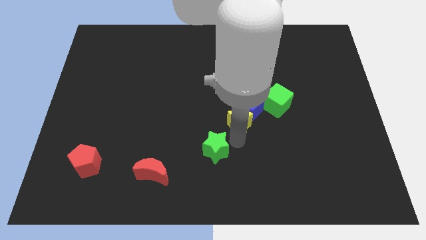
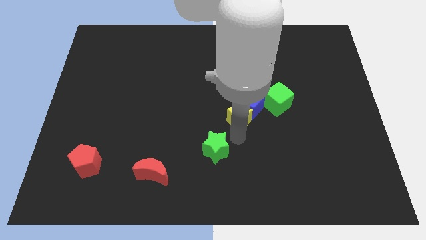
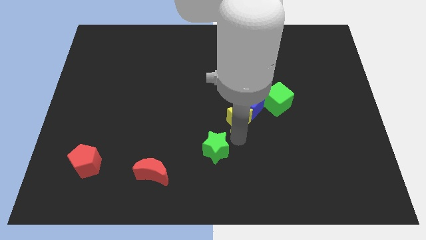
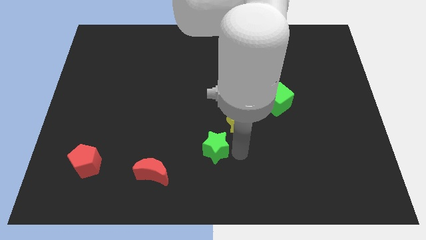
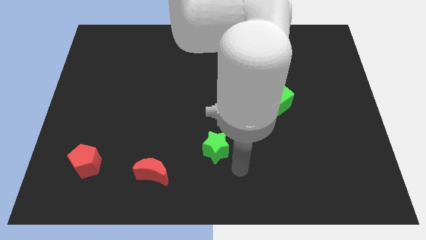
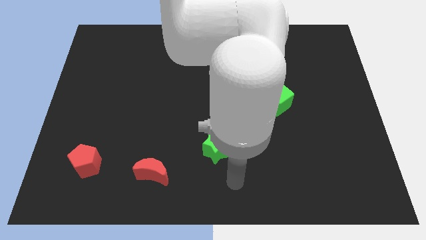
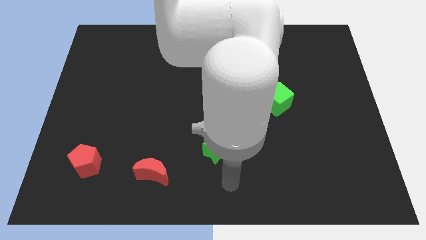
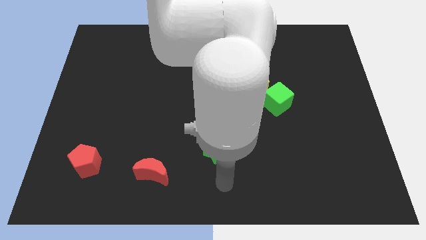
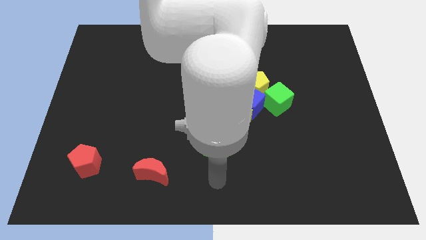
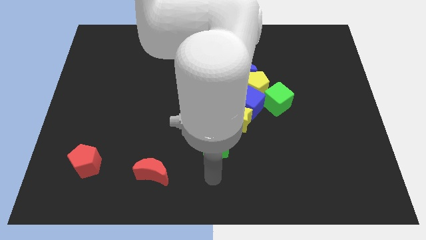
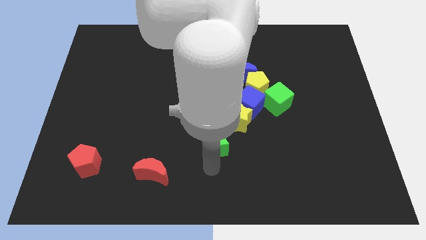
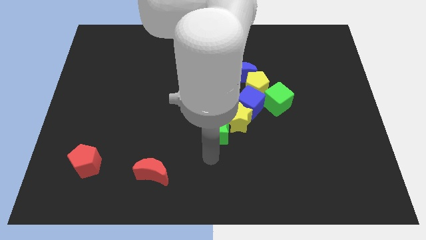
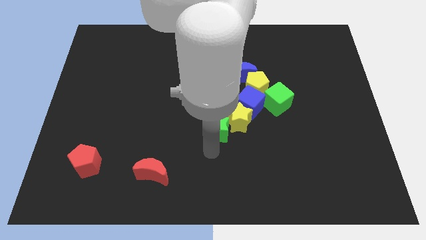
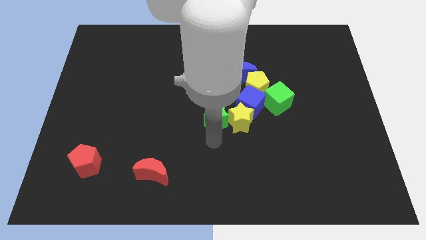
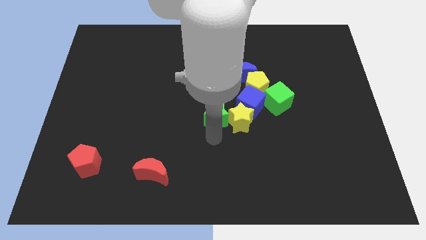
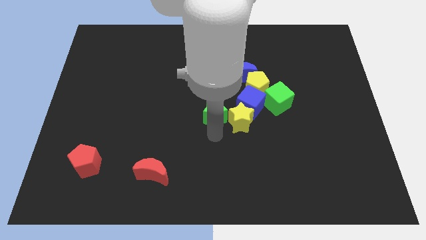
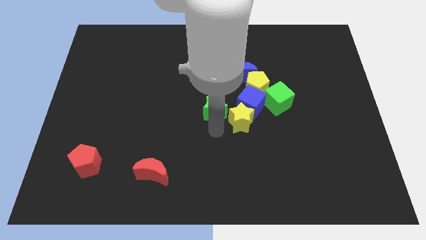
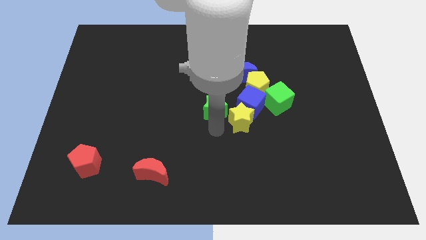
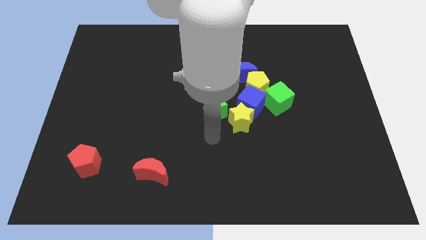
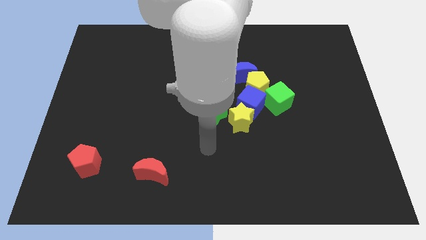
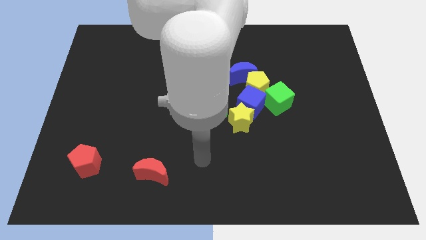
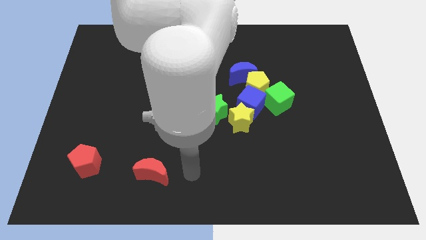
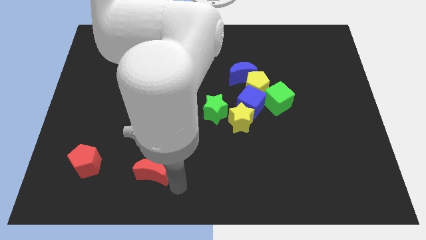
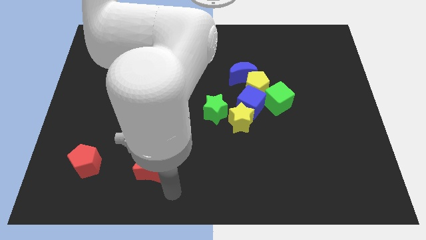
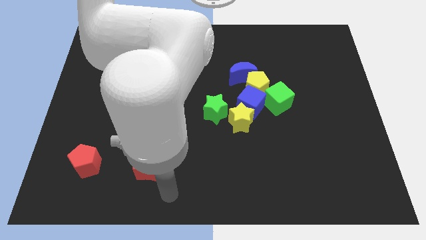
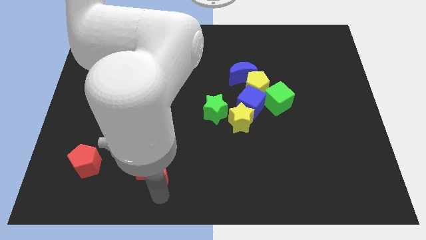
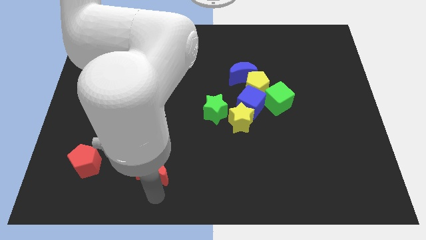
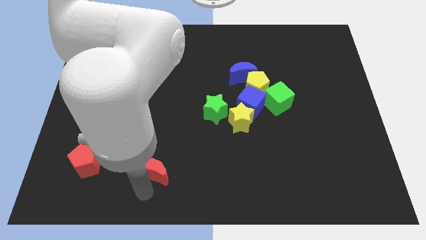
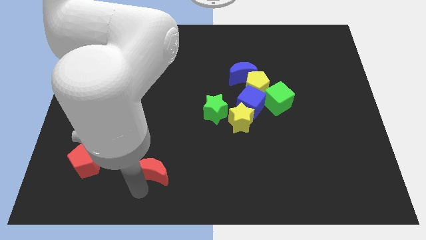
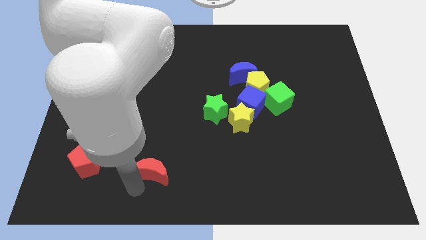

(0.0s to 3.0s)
place the greem star at the left side of the yellow star

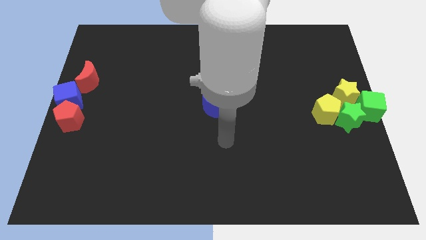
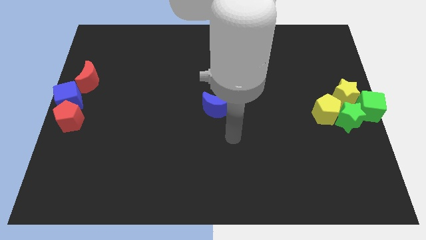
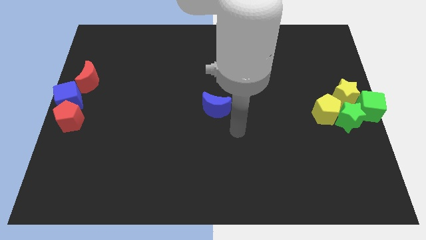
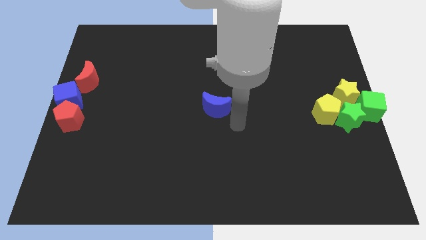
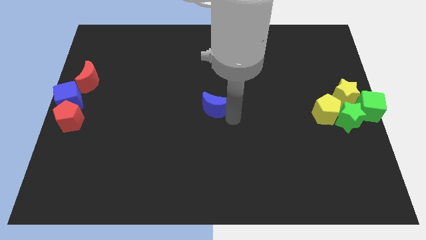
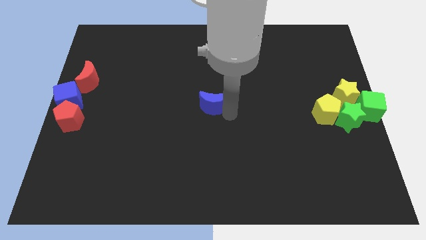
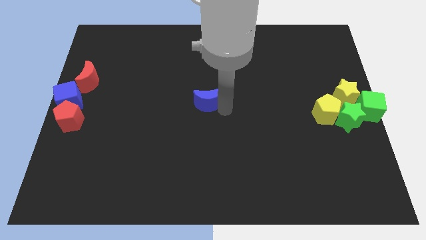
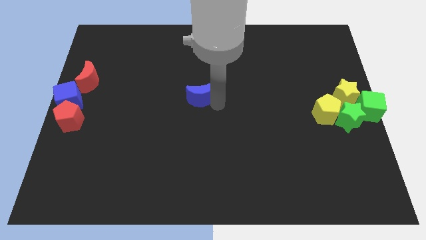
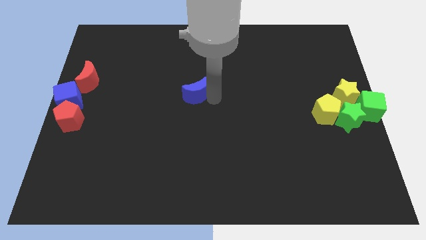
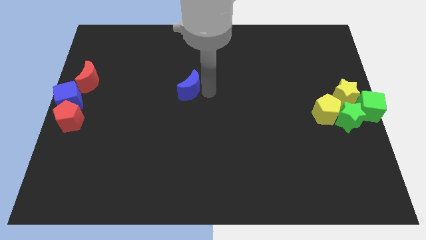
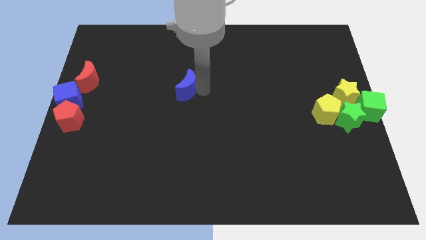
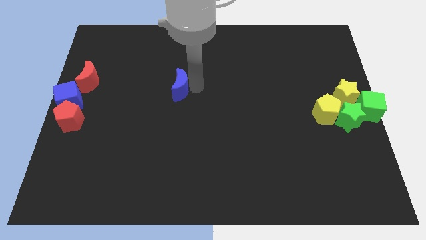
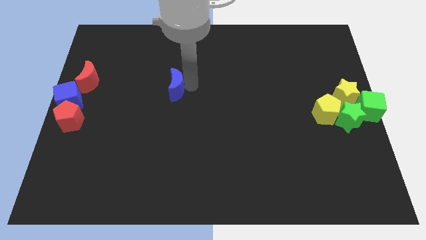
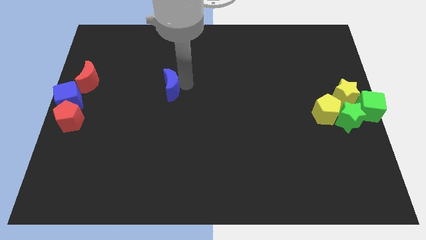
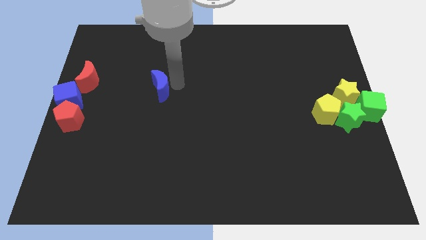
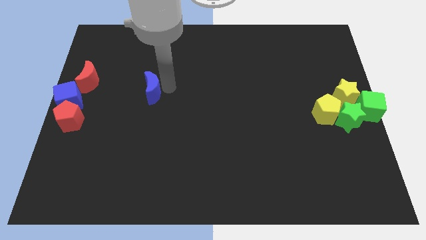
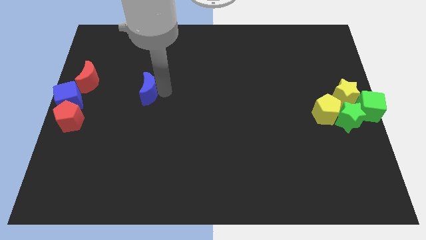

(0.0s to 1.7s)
slide the blue moon towards the center left side of the board

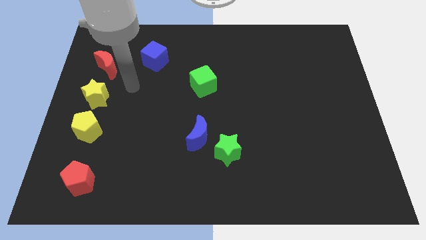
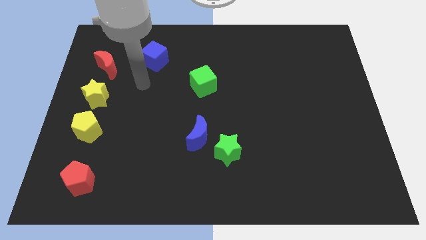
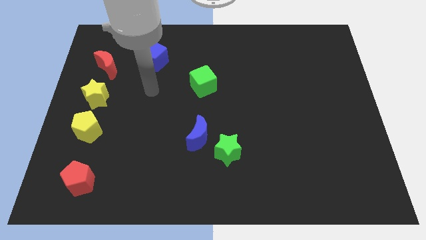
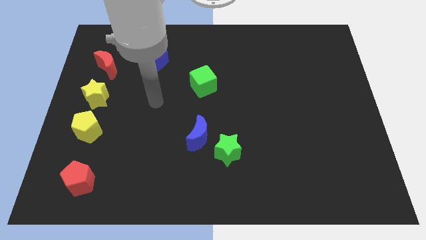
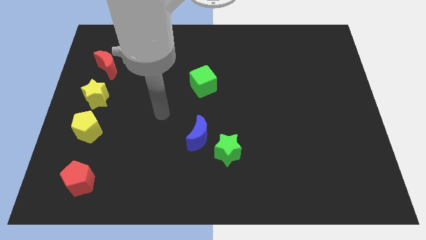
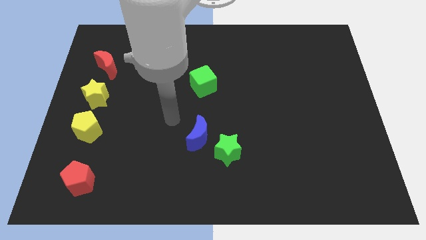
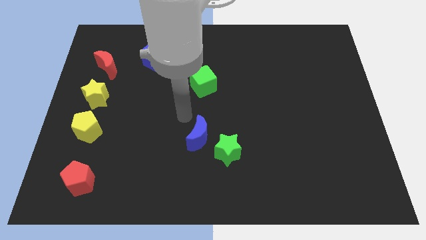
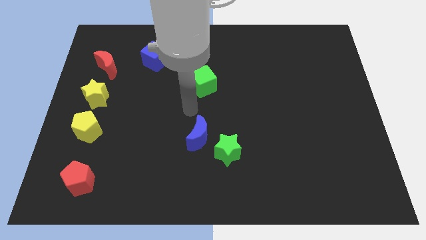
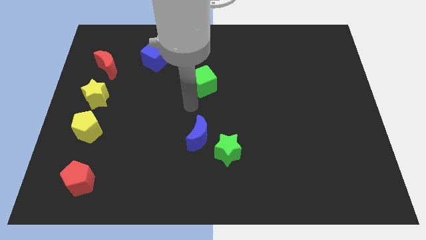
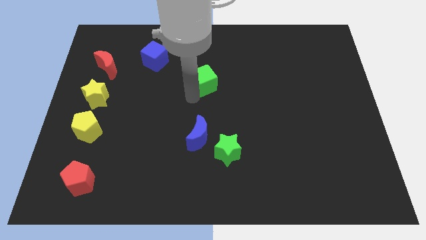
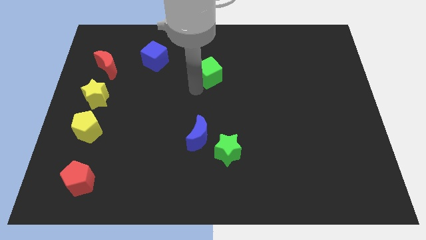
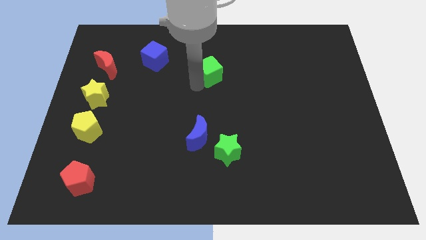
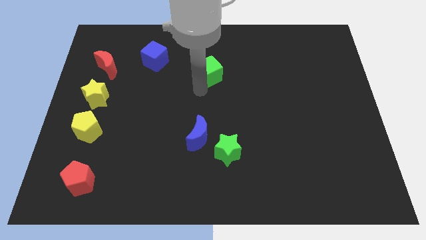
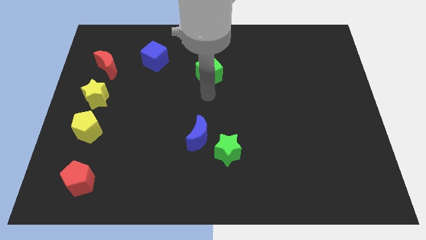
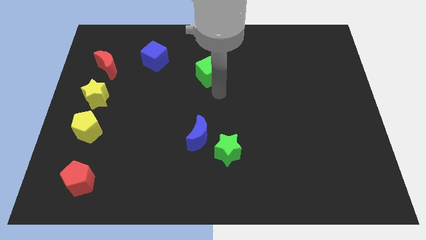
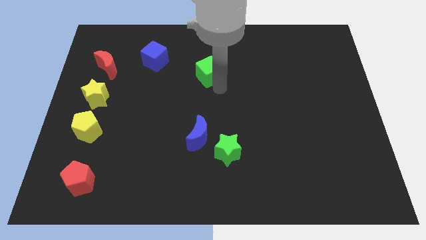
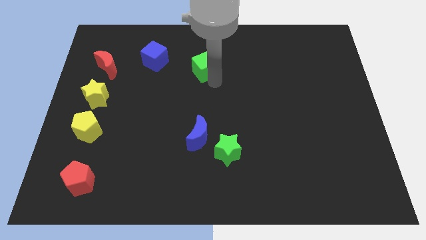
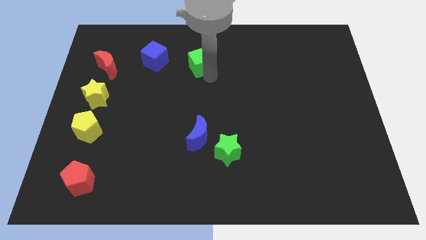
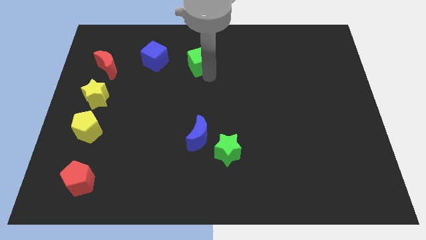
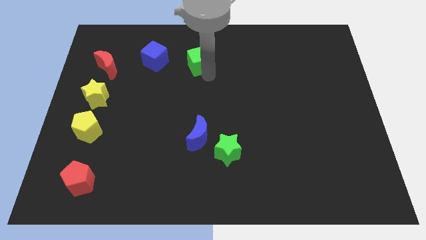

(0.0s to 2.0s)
place the green cube right of the blue cube

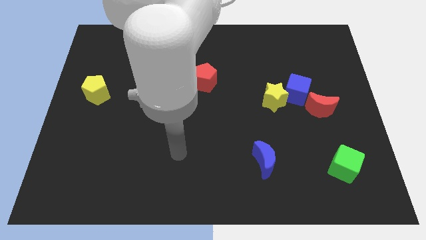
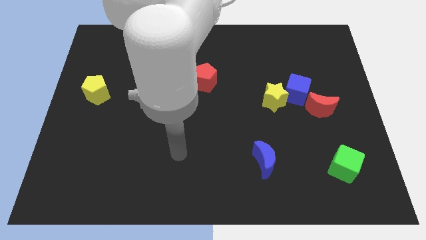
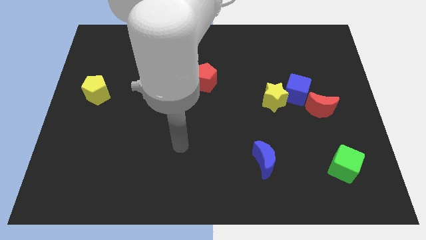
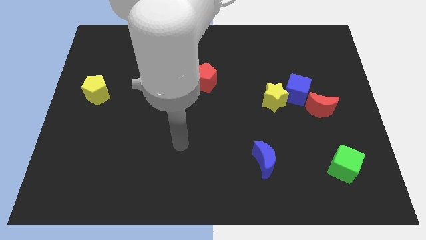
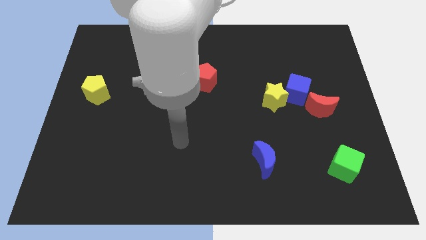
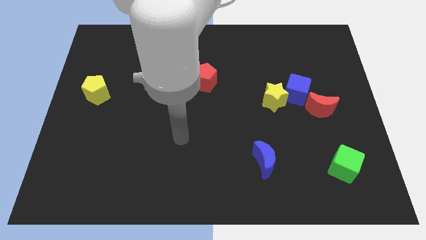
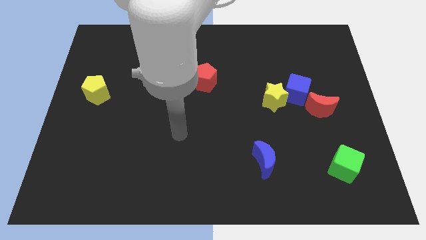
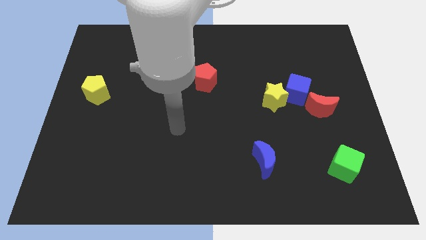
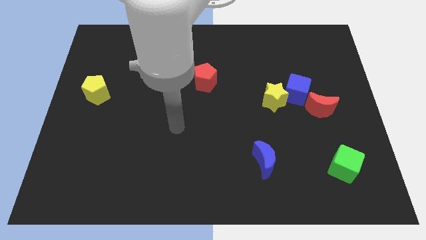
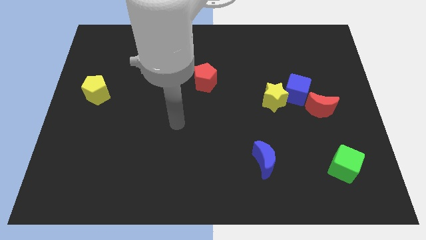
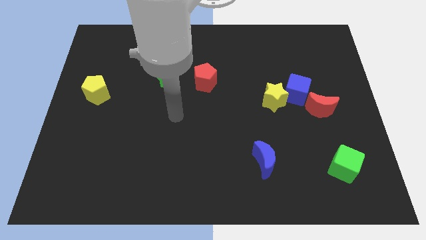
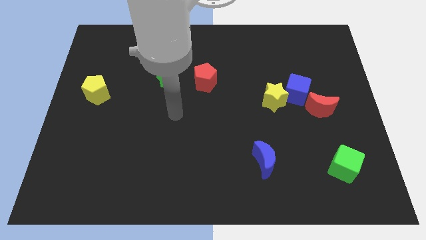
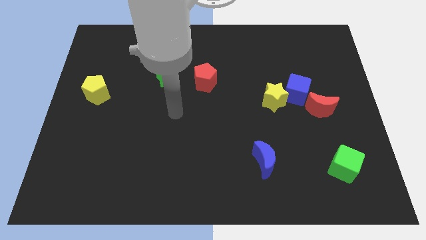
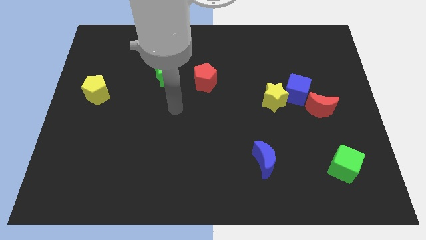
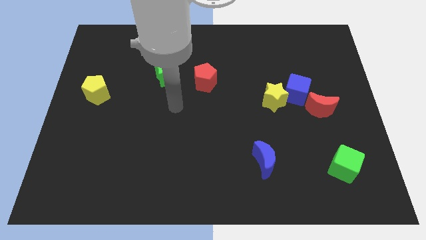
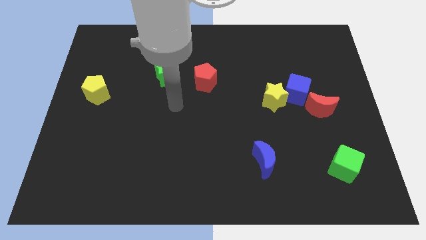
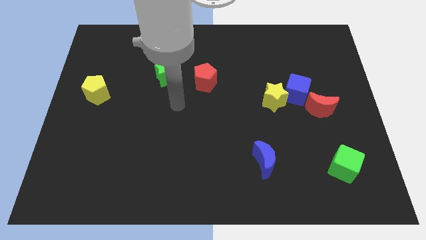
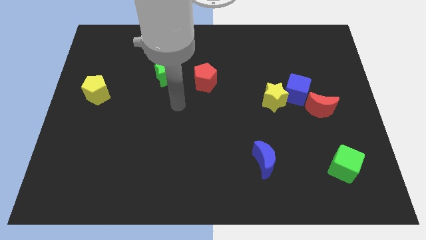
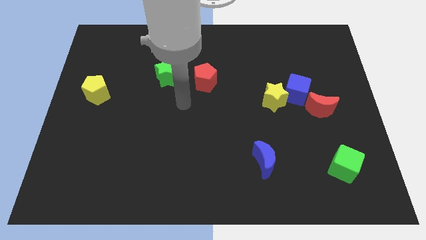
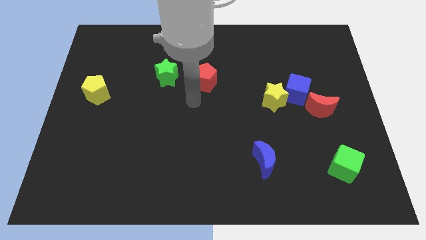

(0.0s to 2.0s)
move the arm towards the green star

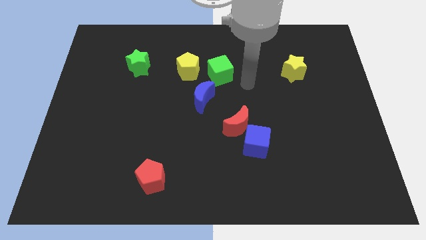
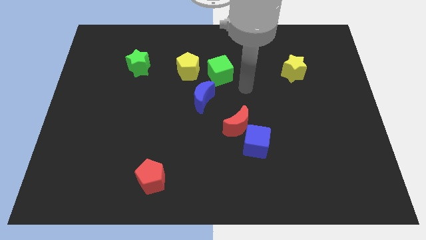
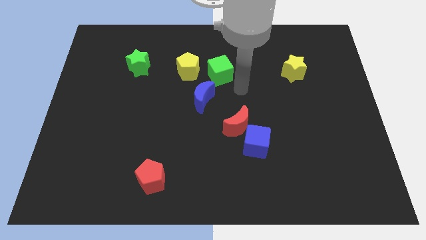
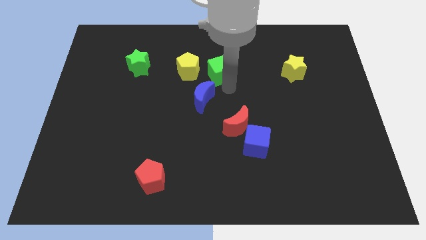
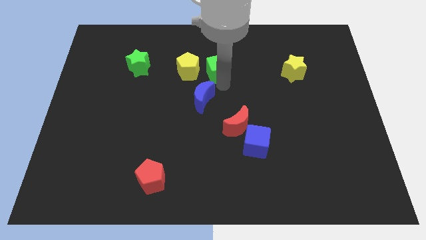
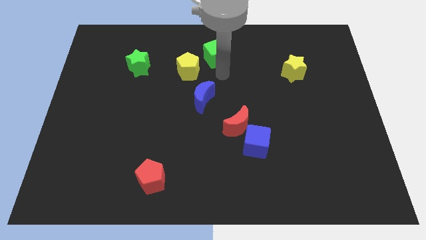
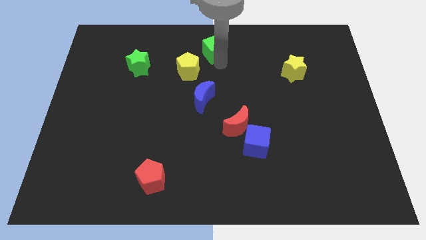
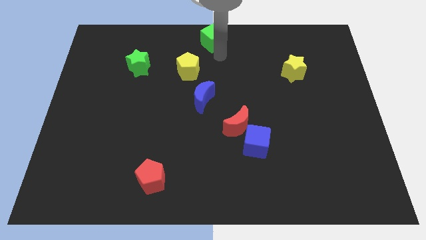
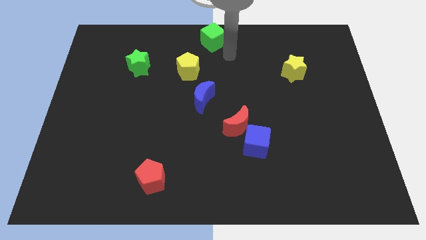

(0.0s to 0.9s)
slide the green cube to the center top of the board
